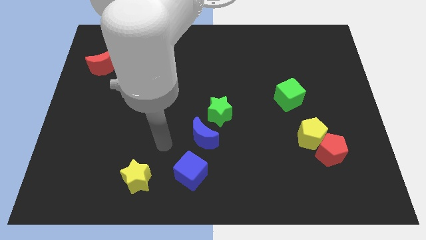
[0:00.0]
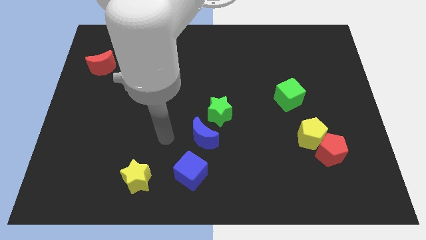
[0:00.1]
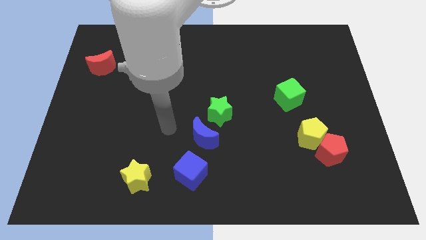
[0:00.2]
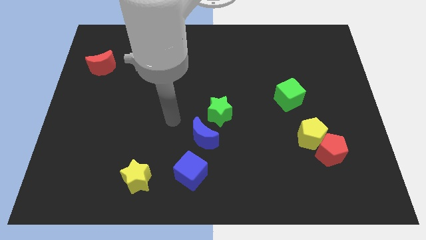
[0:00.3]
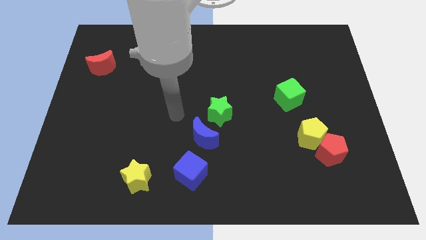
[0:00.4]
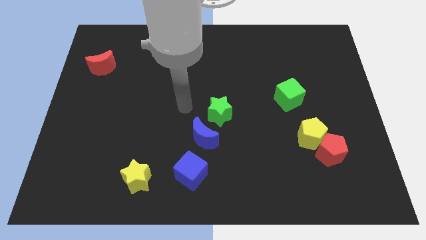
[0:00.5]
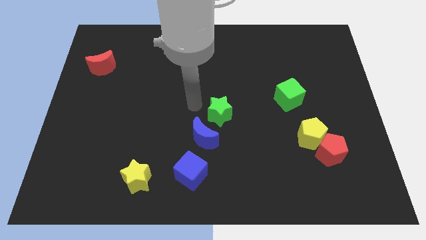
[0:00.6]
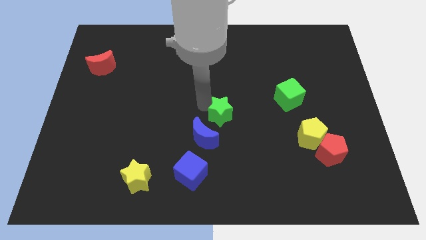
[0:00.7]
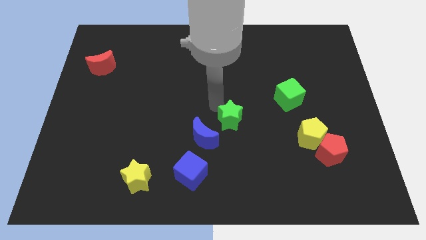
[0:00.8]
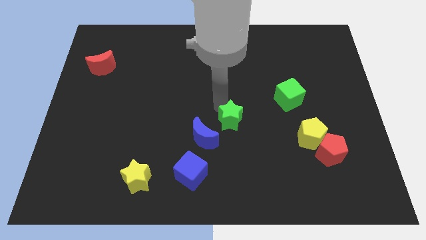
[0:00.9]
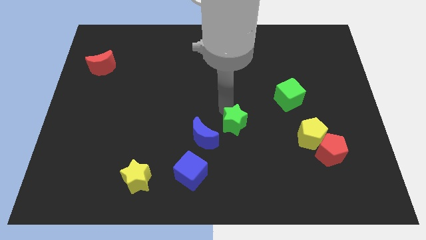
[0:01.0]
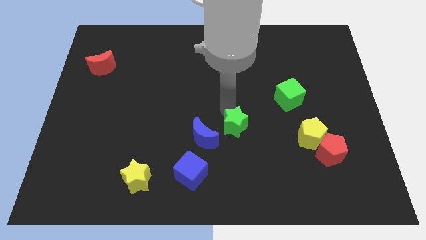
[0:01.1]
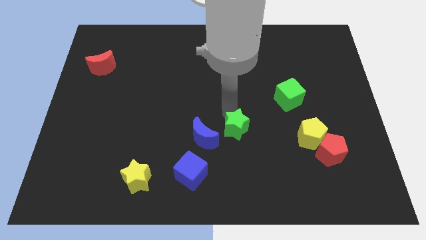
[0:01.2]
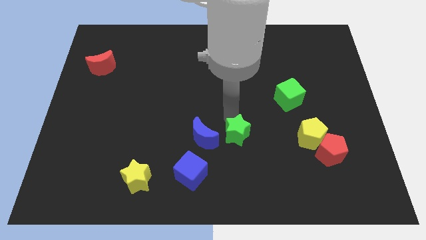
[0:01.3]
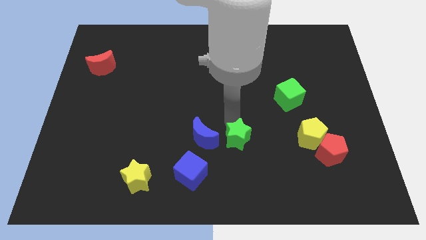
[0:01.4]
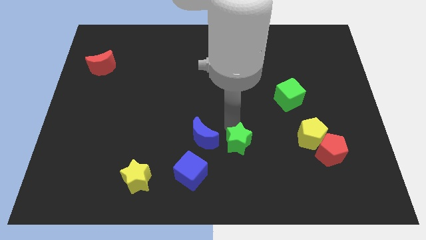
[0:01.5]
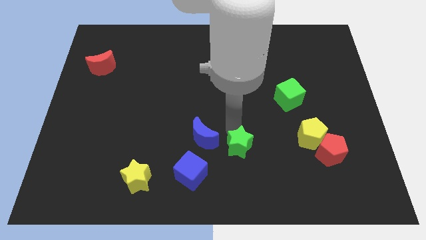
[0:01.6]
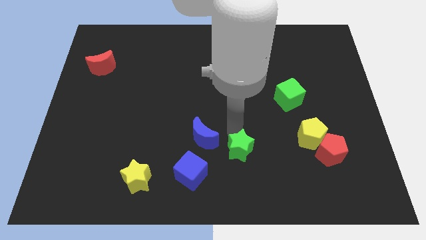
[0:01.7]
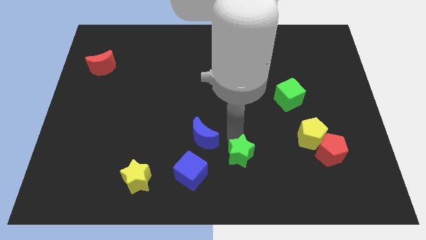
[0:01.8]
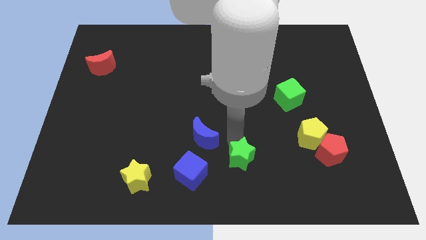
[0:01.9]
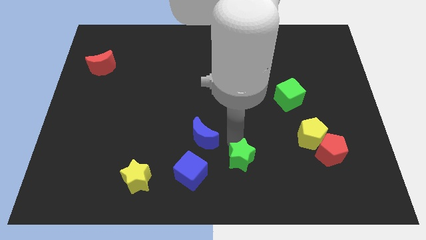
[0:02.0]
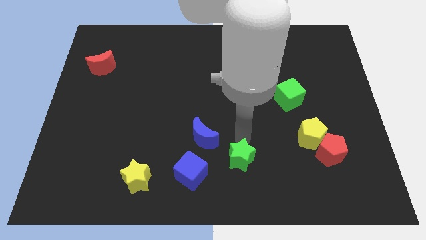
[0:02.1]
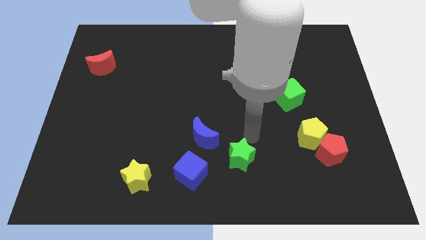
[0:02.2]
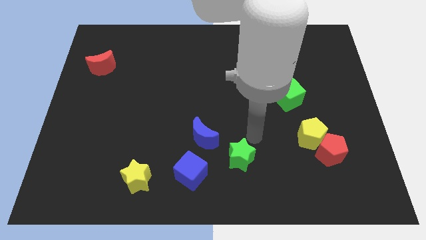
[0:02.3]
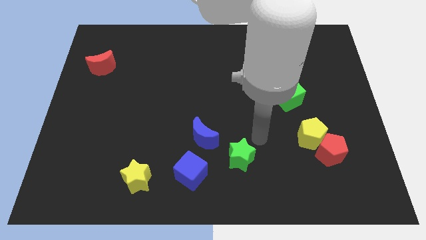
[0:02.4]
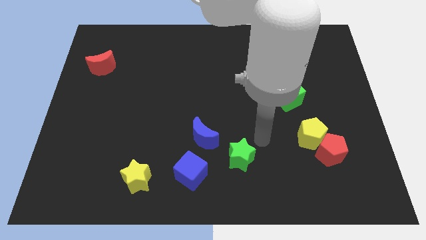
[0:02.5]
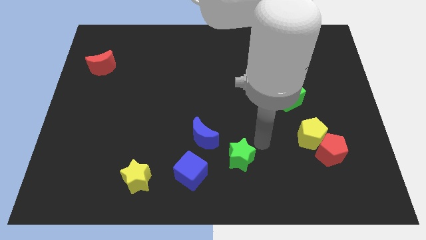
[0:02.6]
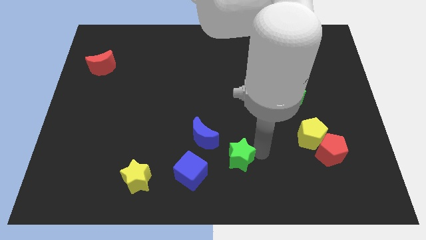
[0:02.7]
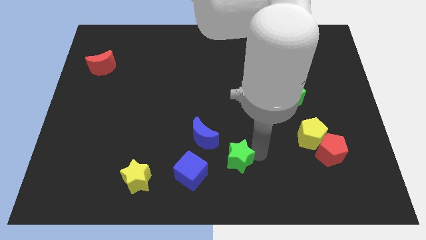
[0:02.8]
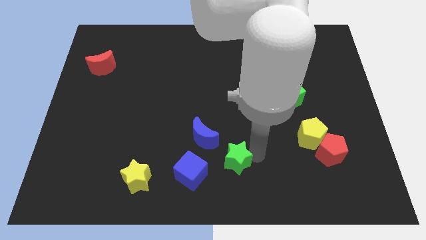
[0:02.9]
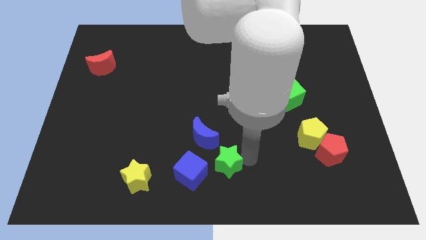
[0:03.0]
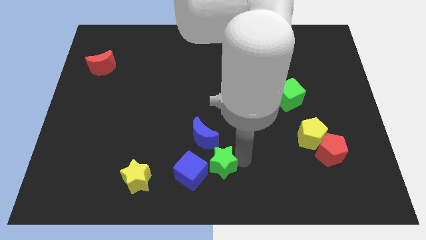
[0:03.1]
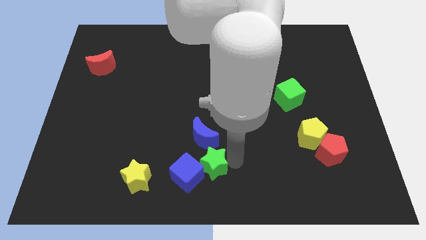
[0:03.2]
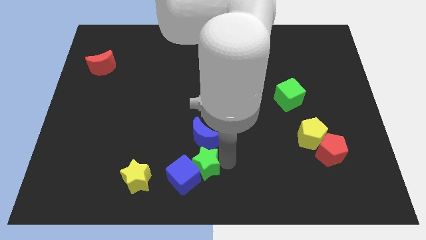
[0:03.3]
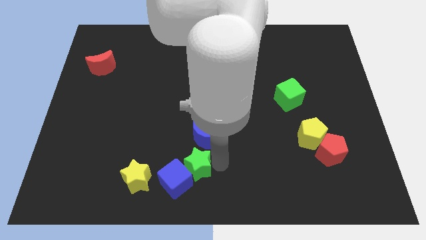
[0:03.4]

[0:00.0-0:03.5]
put the green star to the blue cube

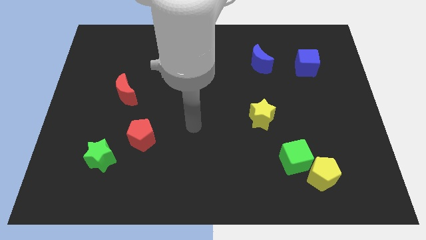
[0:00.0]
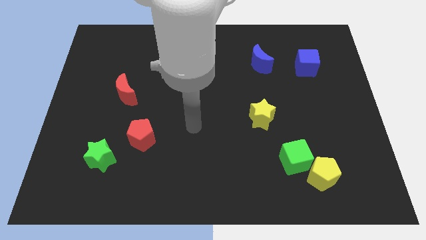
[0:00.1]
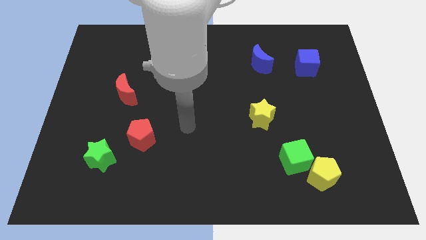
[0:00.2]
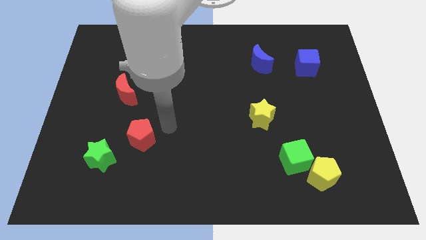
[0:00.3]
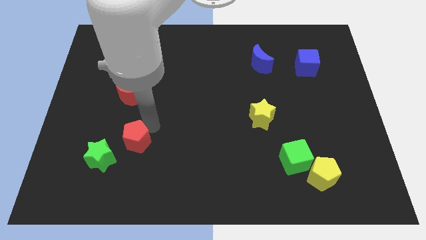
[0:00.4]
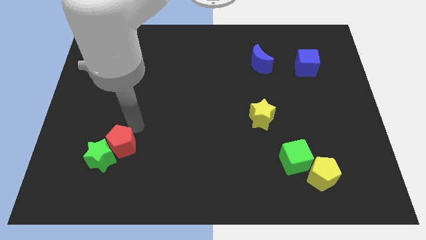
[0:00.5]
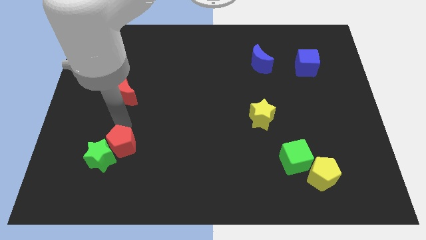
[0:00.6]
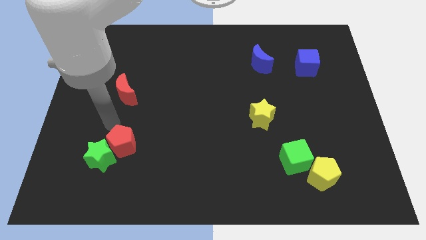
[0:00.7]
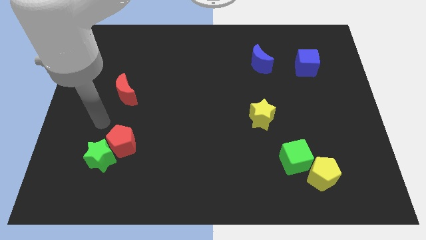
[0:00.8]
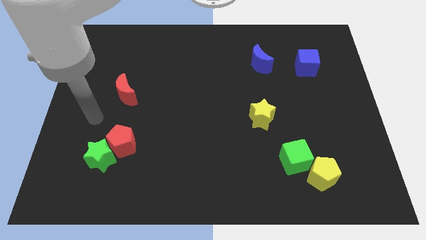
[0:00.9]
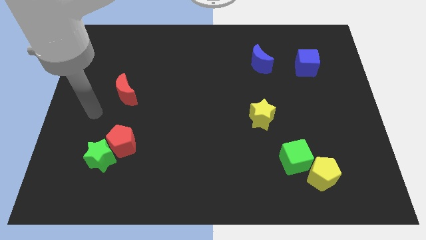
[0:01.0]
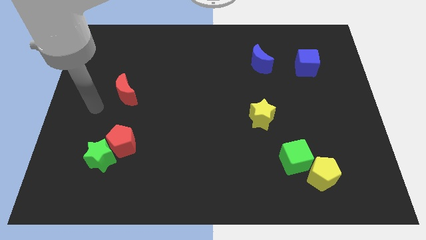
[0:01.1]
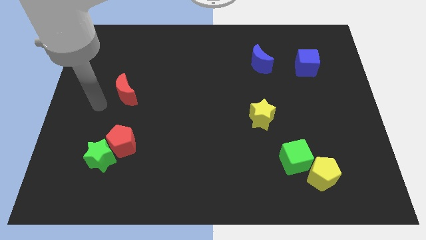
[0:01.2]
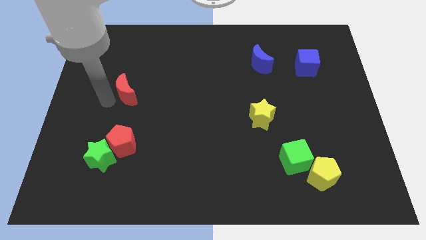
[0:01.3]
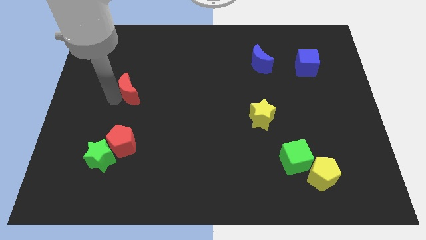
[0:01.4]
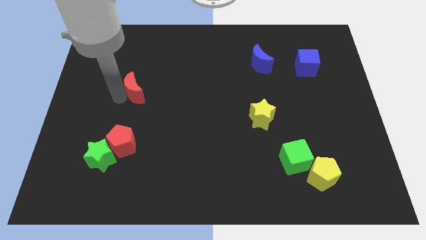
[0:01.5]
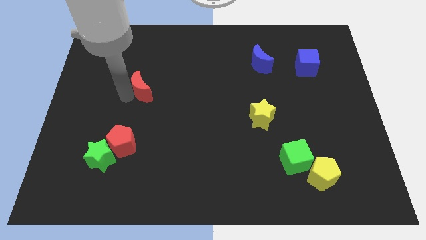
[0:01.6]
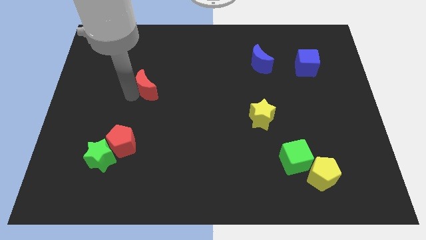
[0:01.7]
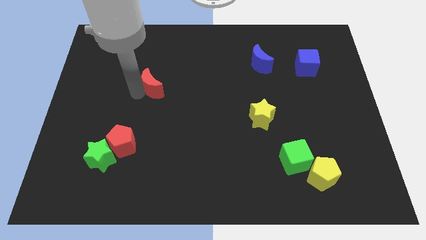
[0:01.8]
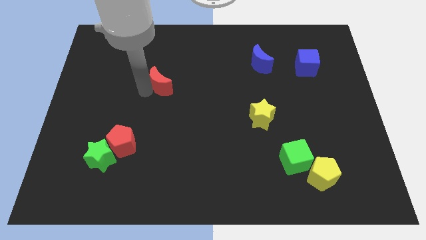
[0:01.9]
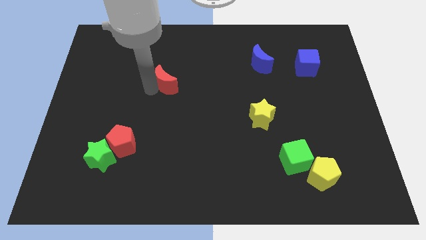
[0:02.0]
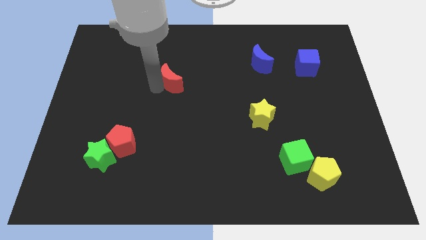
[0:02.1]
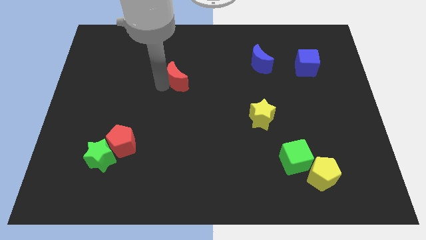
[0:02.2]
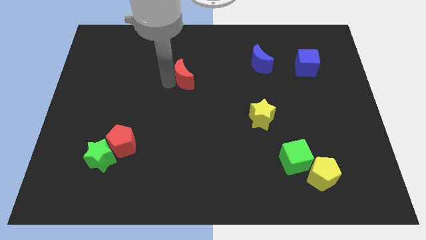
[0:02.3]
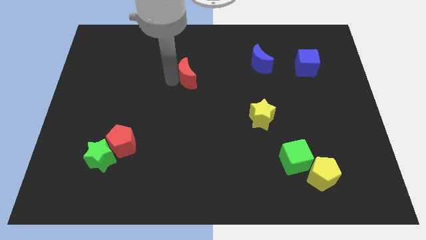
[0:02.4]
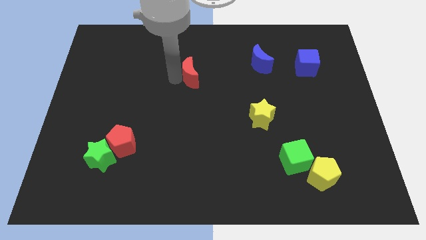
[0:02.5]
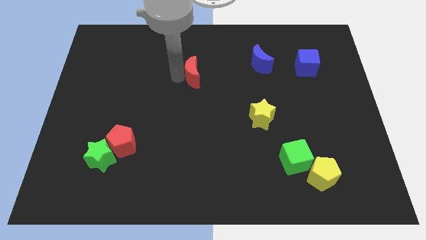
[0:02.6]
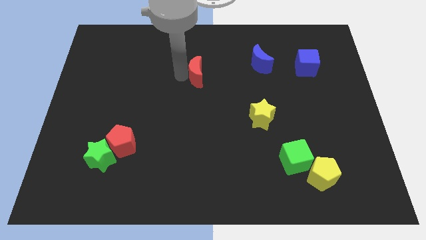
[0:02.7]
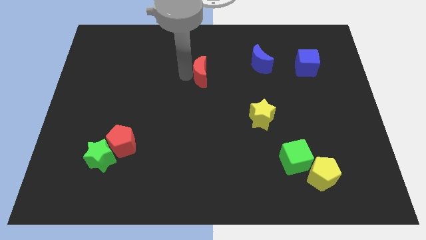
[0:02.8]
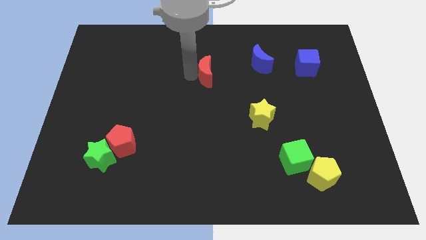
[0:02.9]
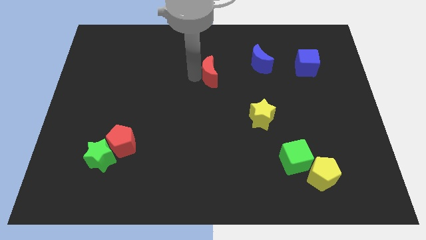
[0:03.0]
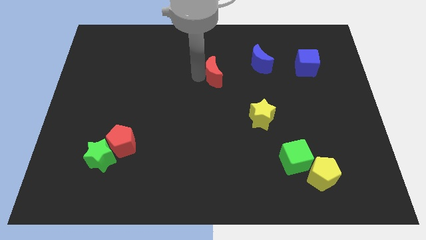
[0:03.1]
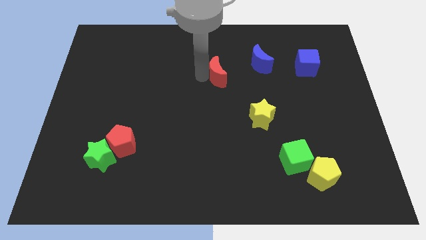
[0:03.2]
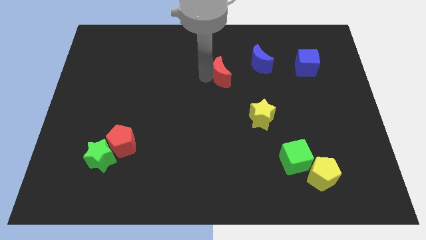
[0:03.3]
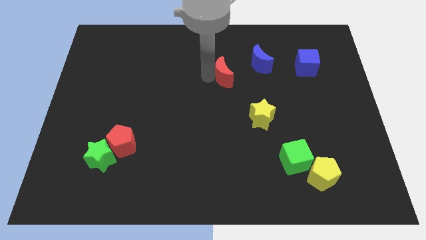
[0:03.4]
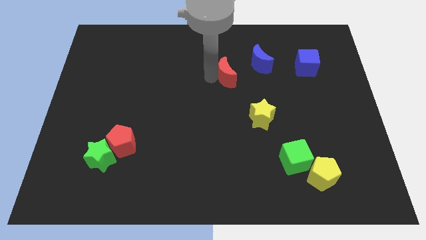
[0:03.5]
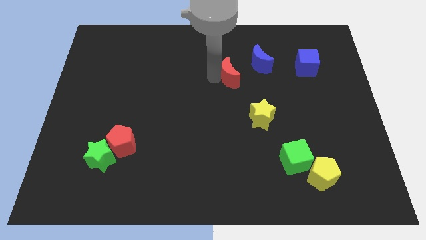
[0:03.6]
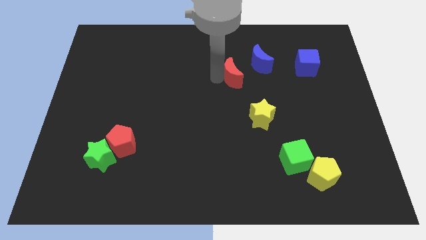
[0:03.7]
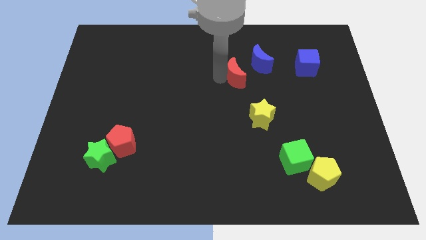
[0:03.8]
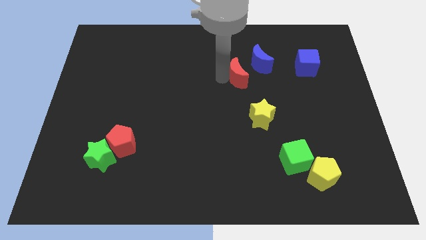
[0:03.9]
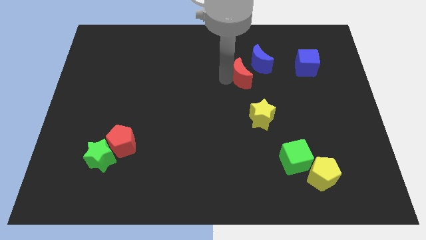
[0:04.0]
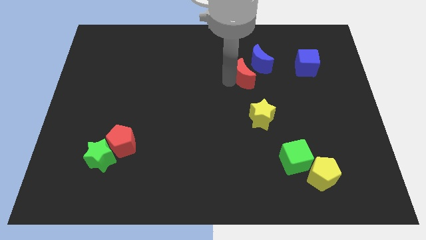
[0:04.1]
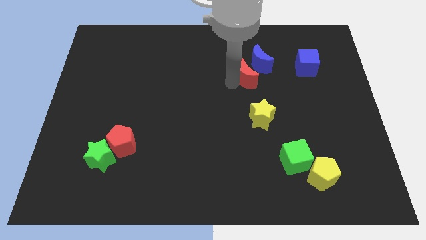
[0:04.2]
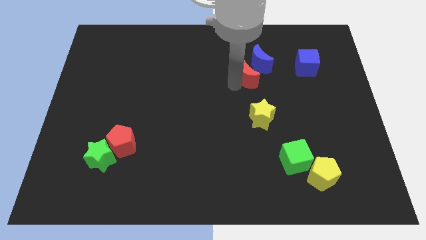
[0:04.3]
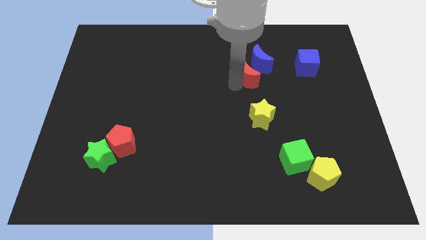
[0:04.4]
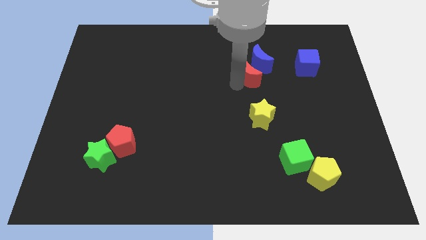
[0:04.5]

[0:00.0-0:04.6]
slide the red moon close to the blue moon
